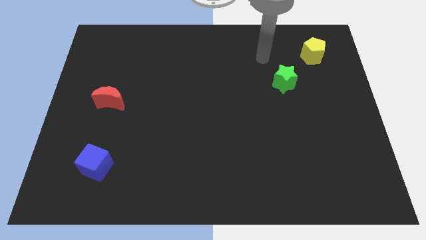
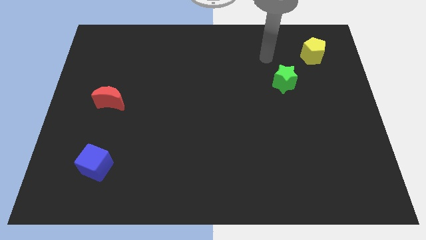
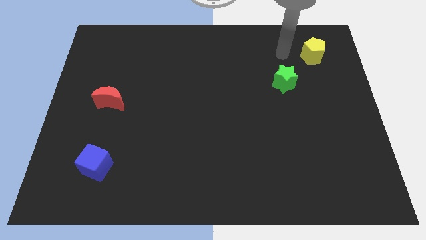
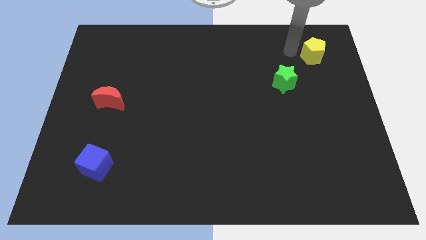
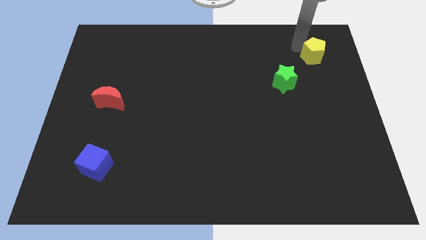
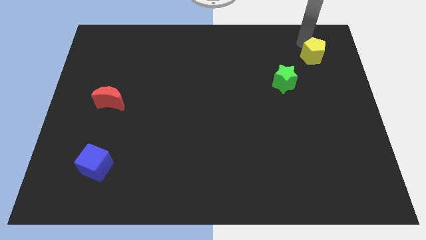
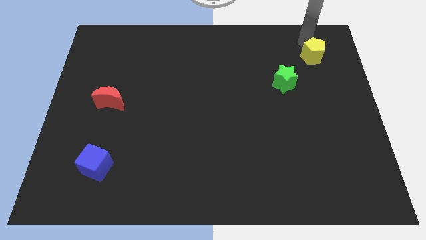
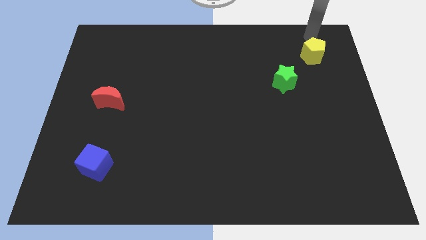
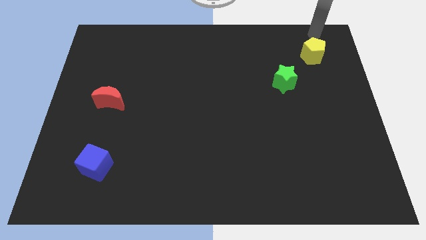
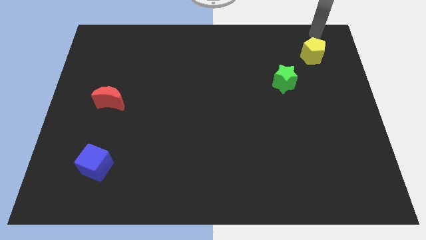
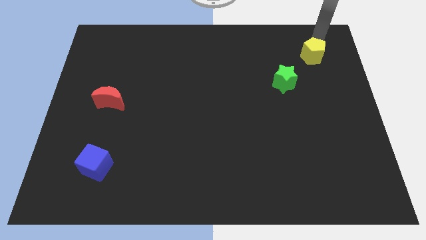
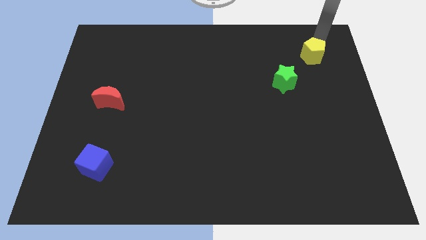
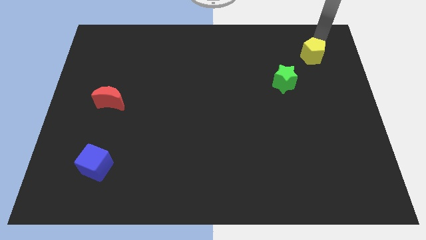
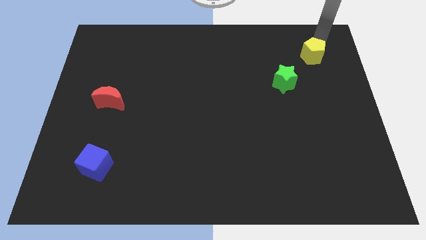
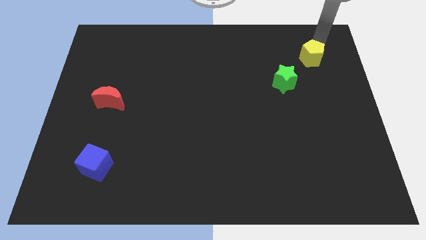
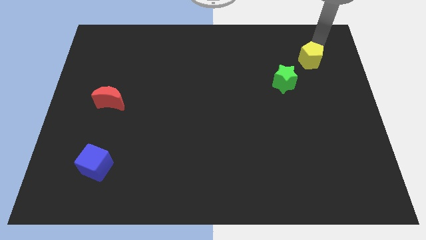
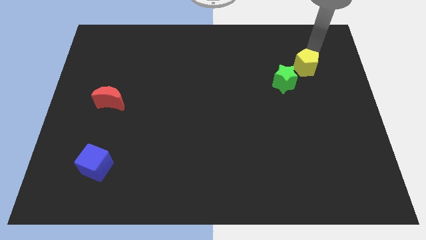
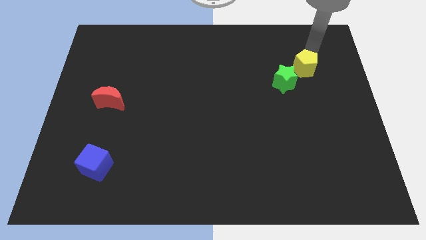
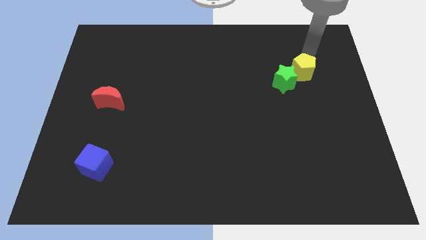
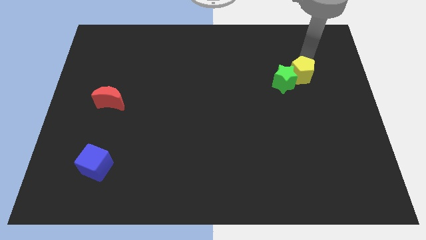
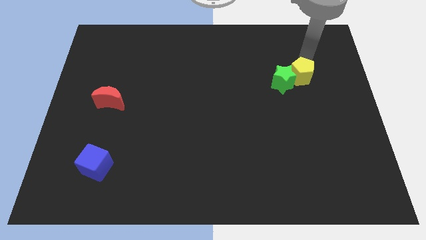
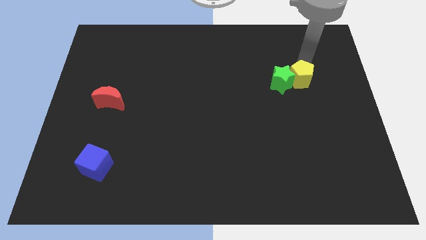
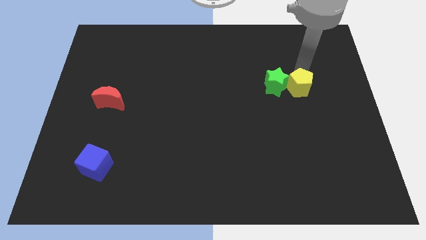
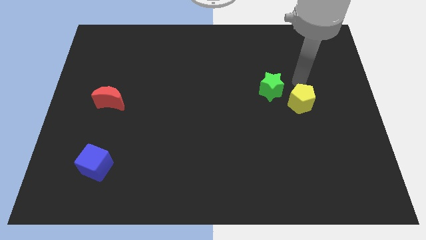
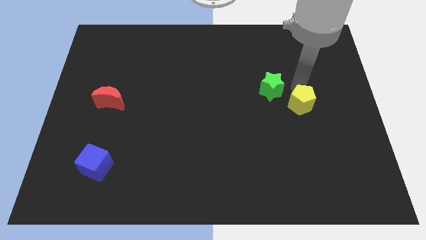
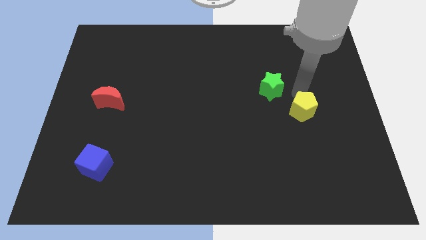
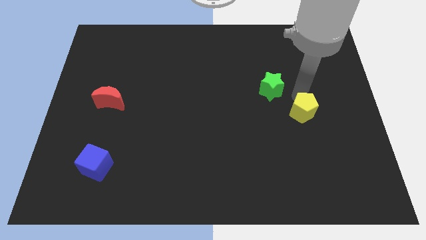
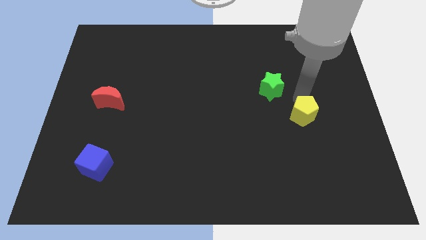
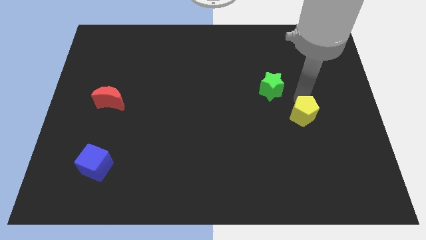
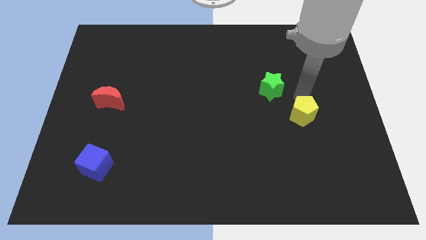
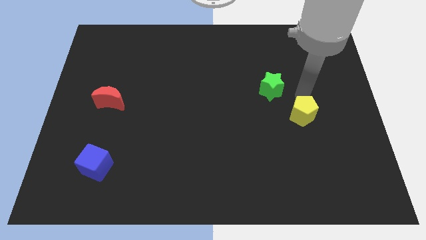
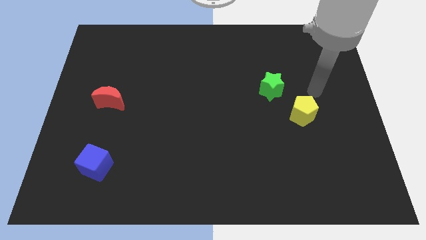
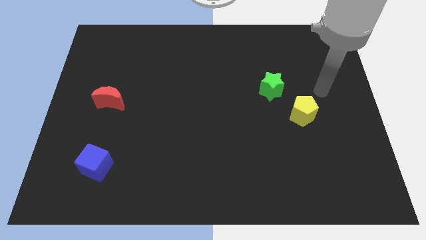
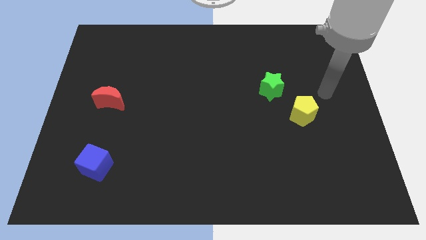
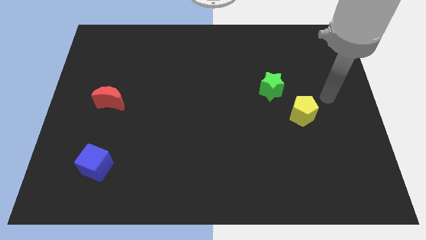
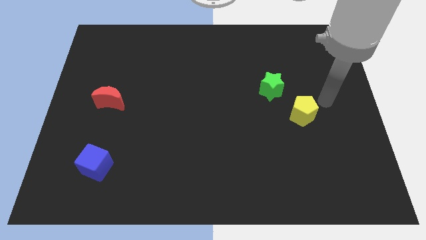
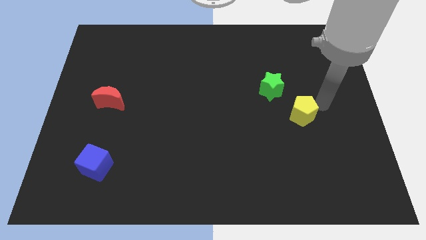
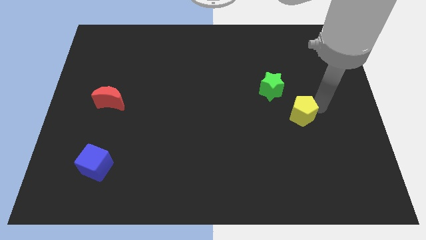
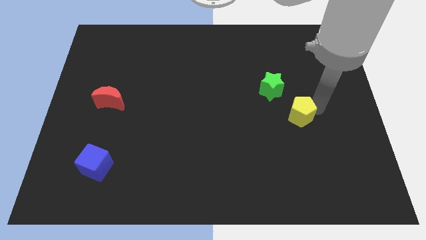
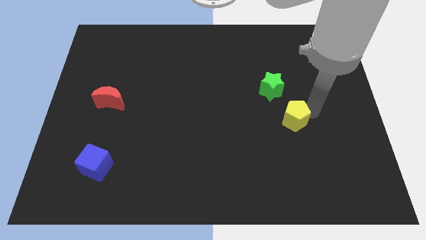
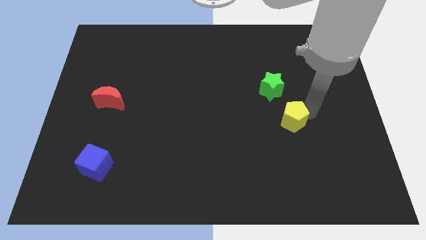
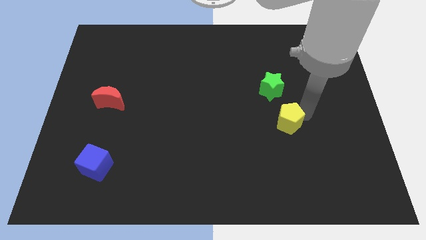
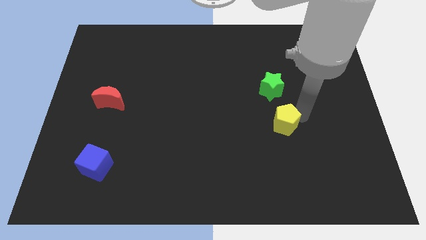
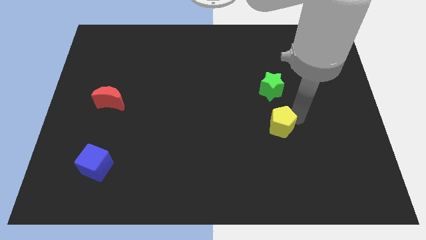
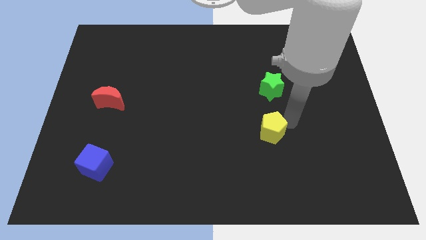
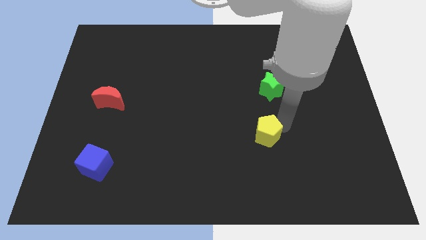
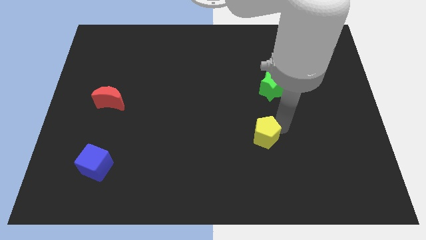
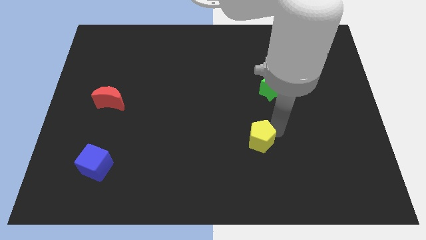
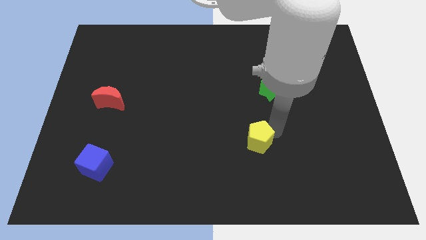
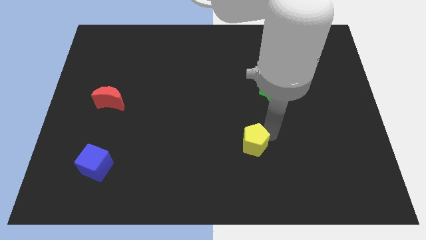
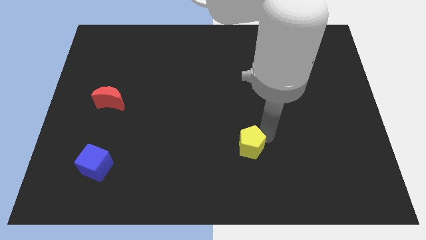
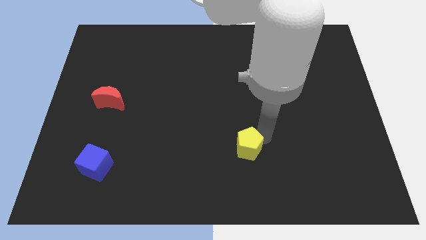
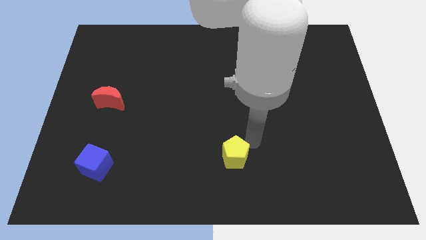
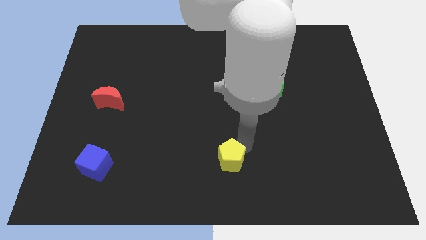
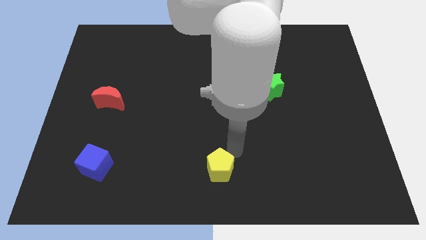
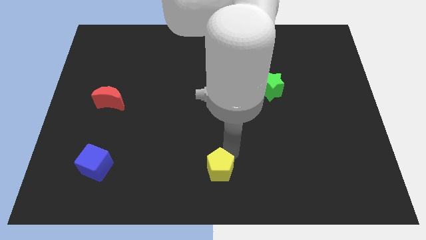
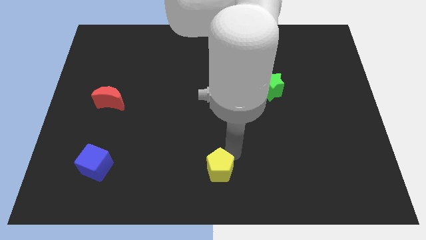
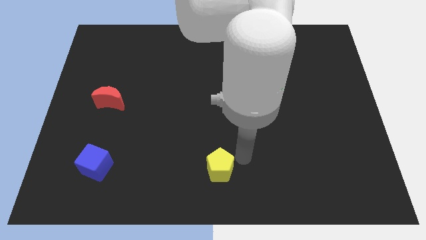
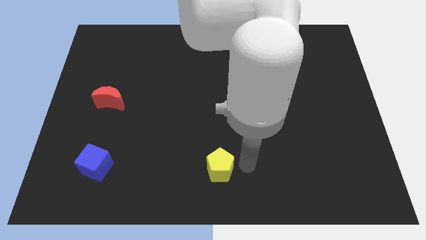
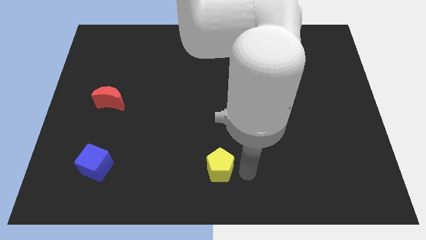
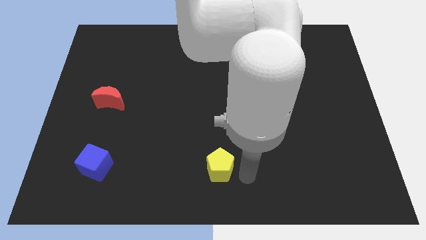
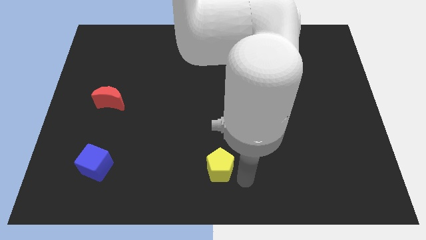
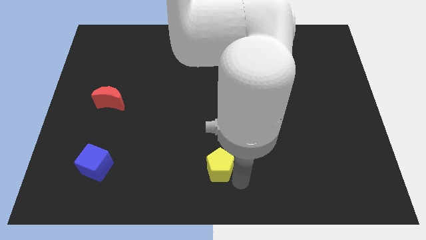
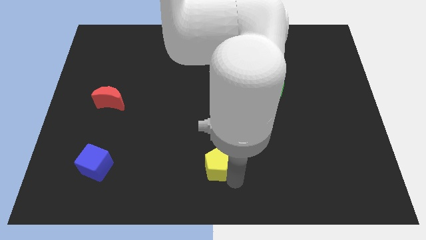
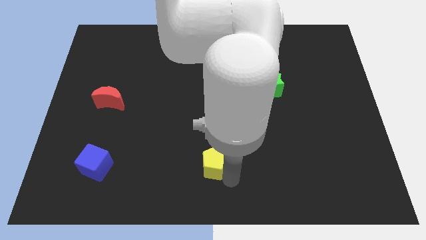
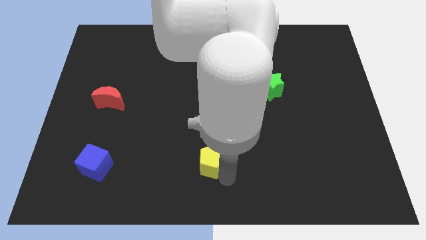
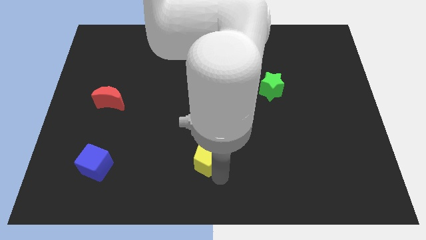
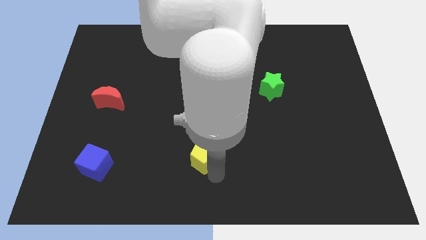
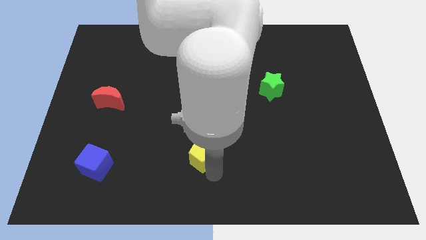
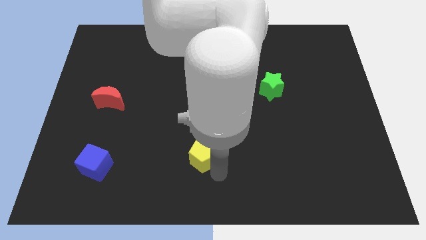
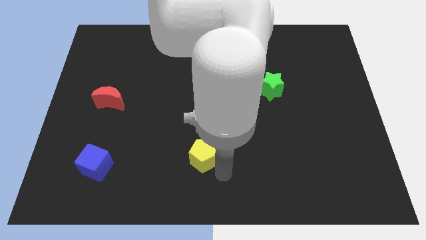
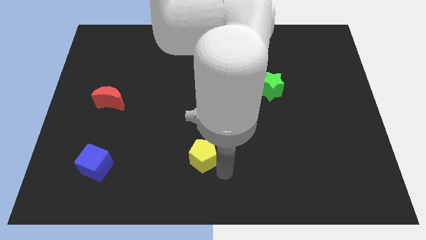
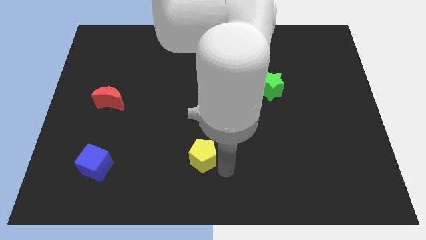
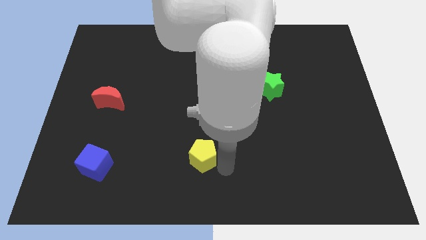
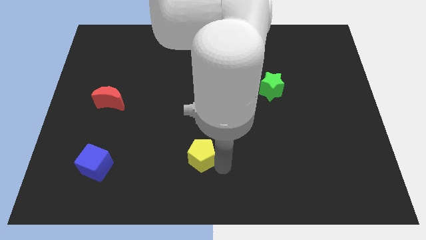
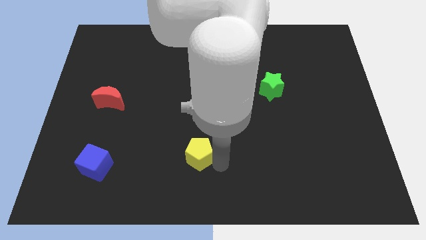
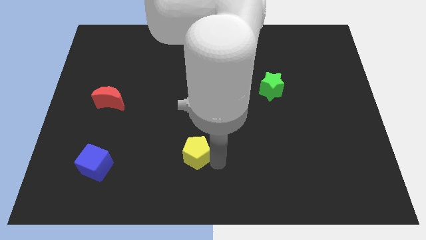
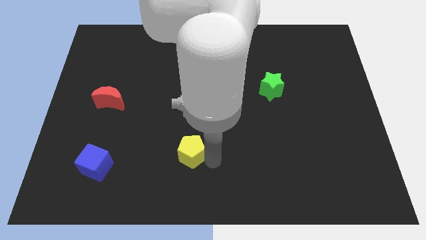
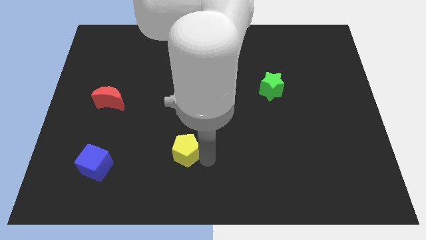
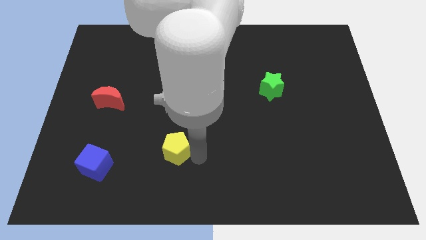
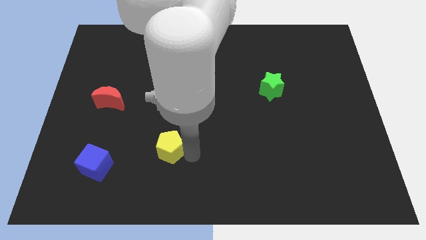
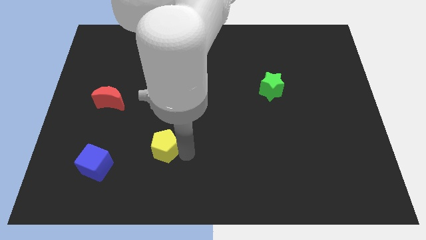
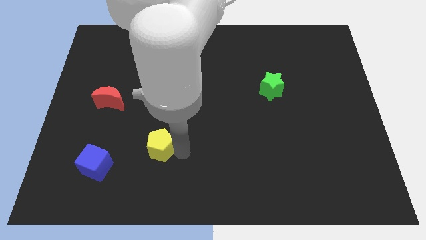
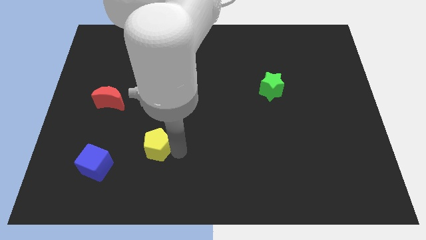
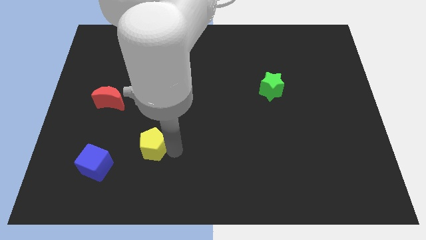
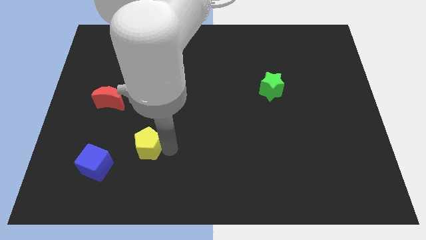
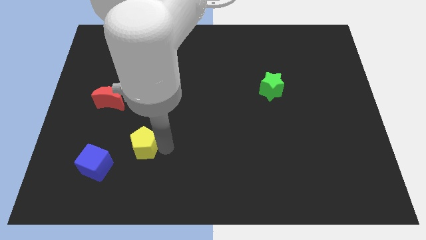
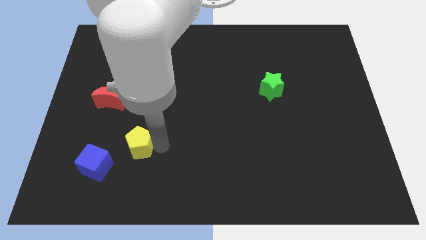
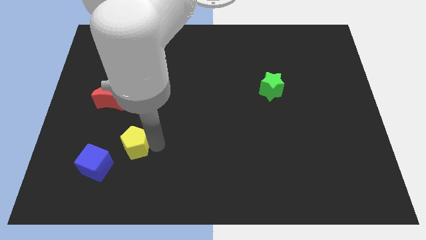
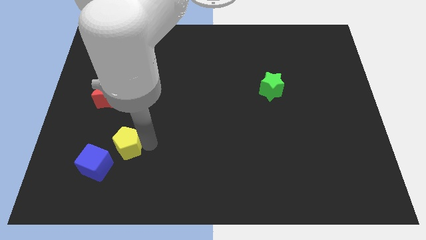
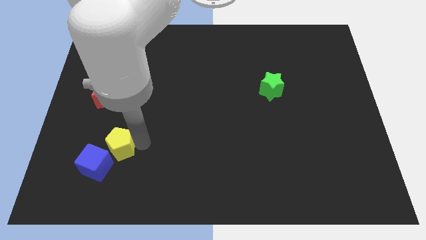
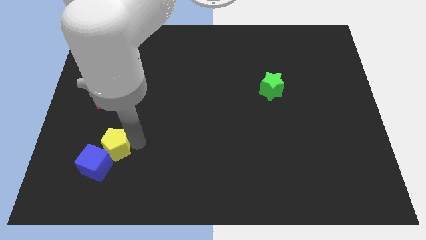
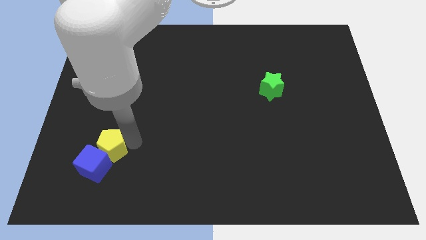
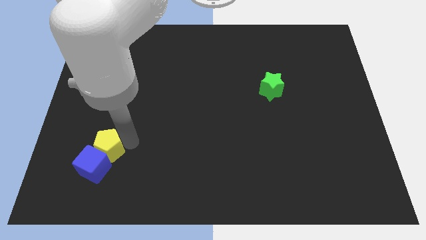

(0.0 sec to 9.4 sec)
push the pentagon towards the blue cube
